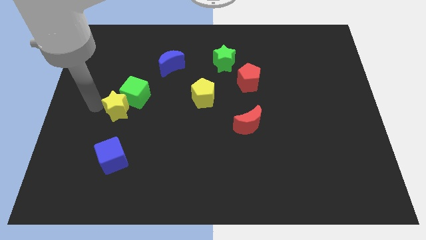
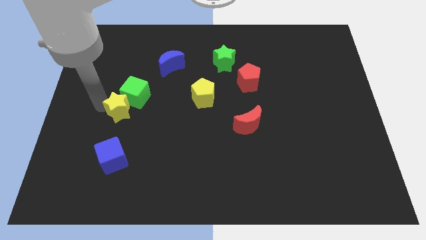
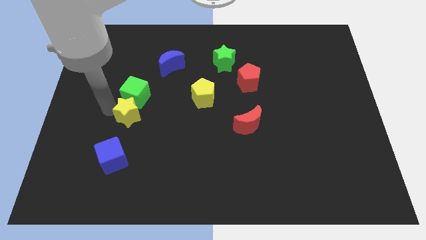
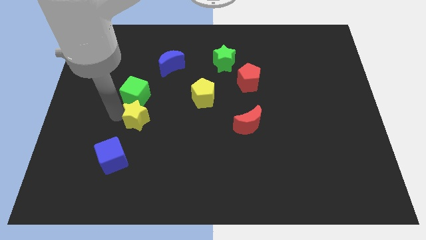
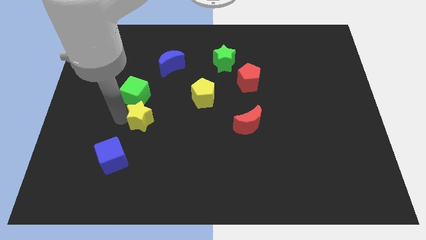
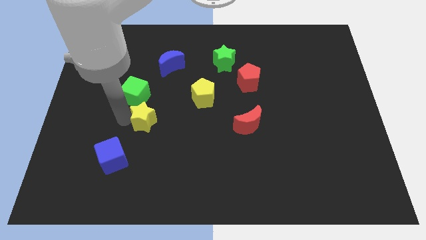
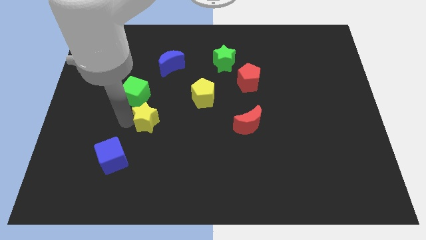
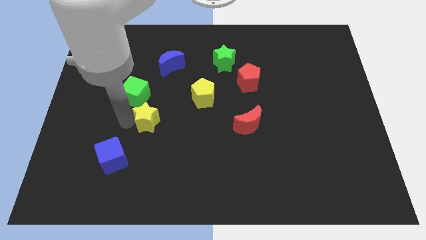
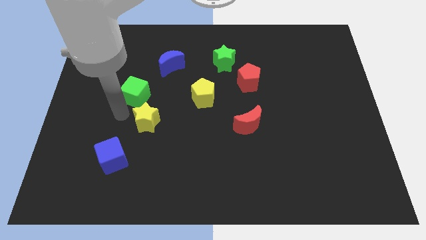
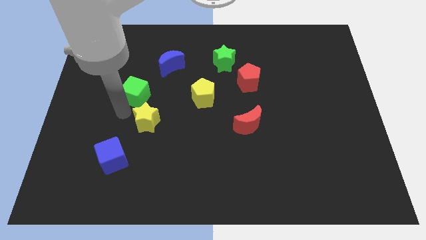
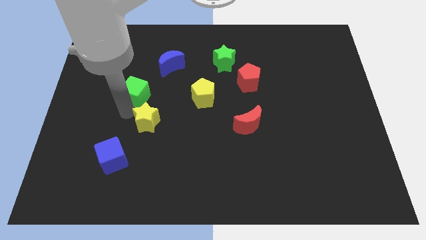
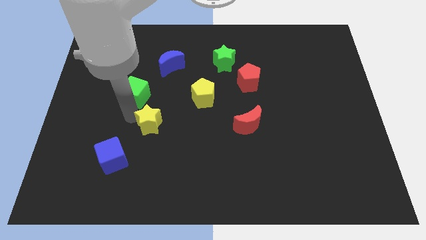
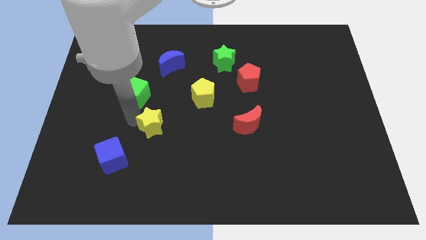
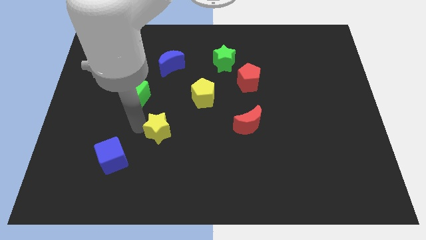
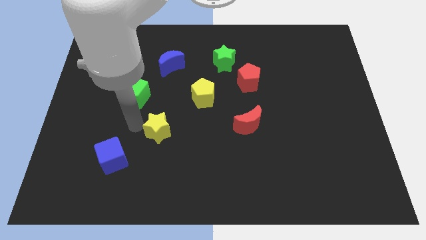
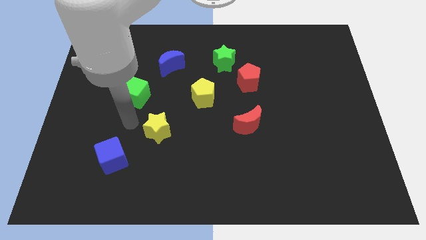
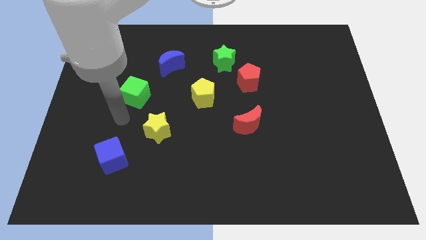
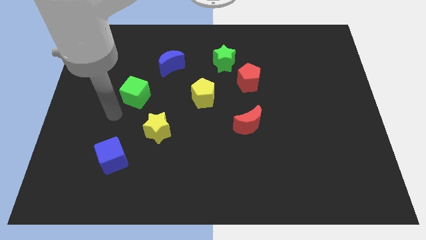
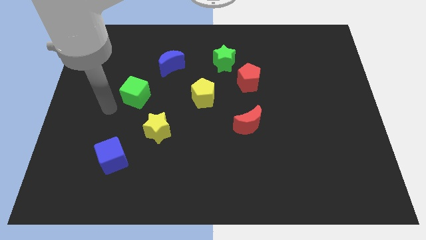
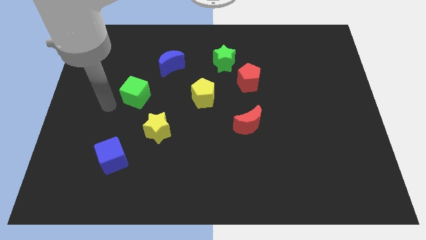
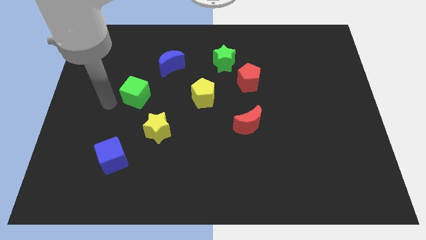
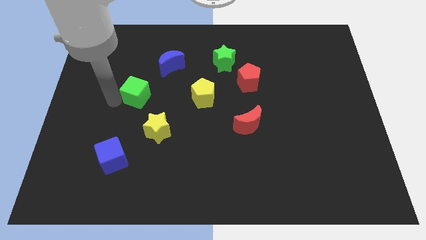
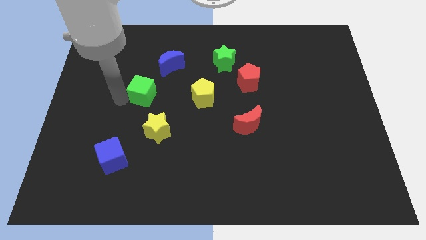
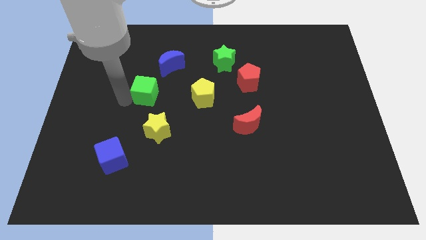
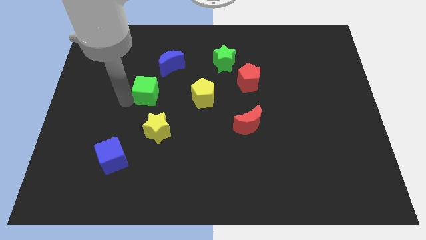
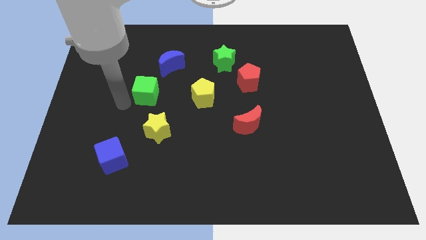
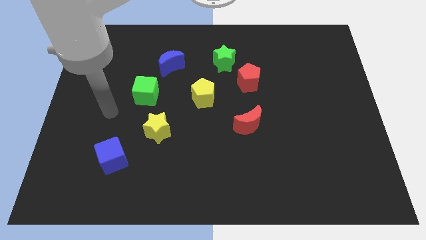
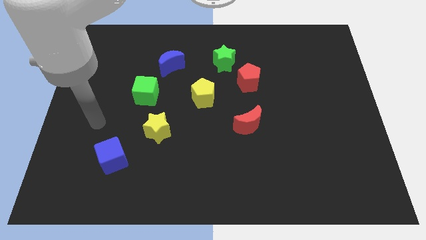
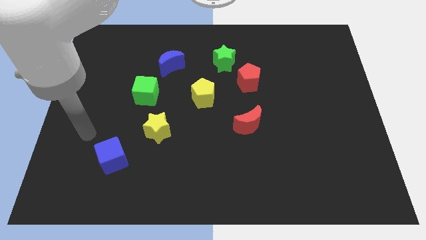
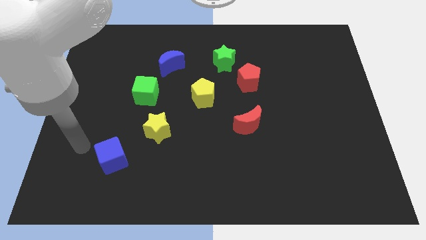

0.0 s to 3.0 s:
separate the yellow star and green cube

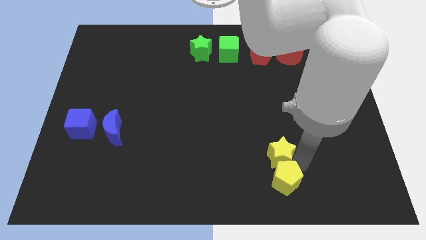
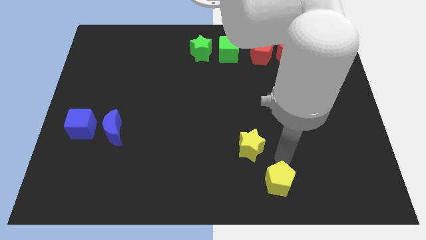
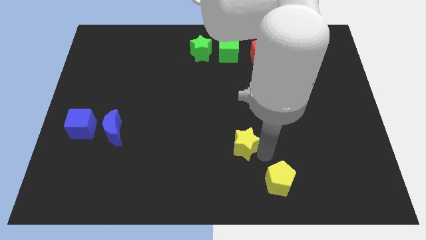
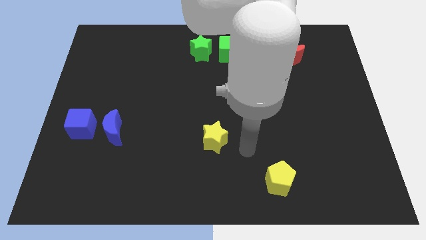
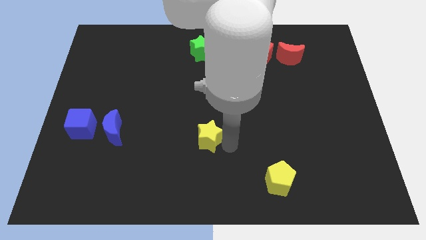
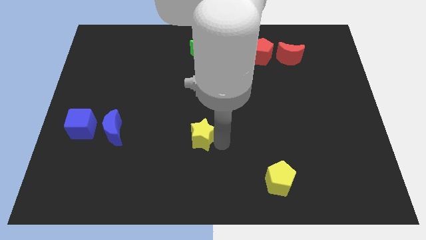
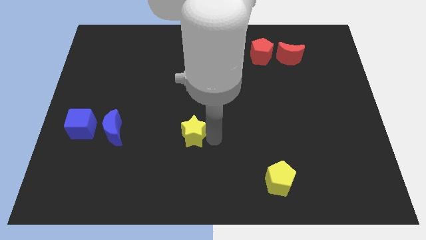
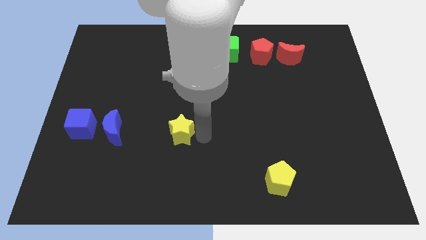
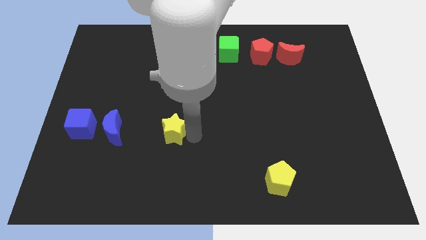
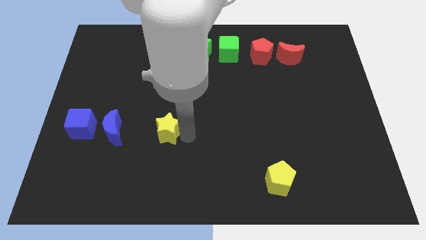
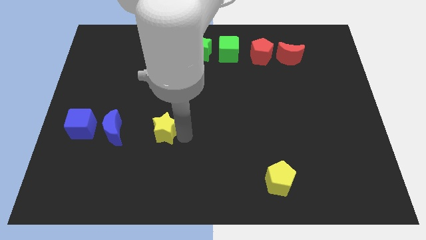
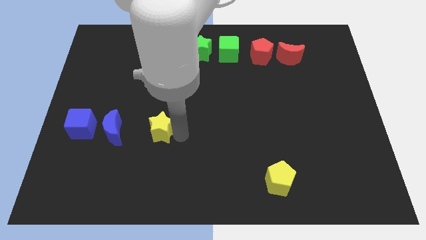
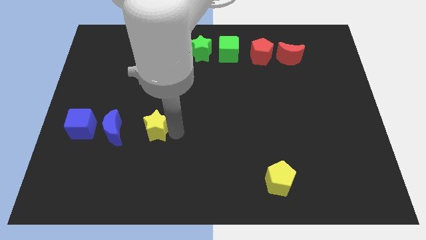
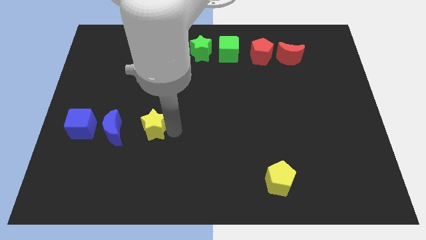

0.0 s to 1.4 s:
separate yellow star from the yellow pentagon

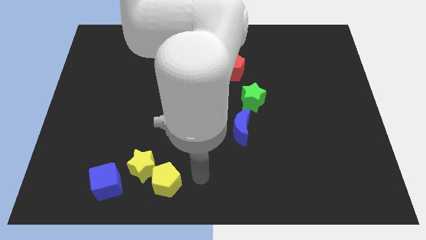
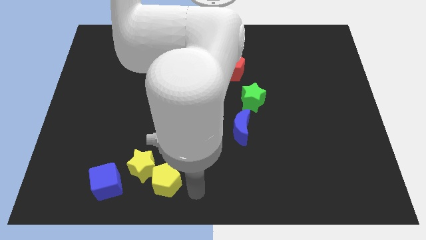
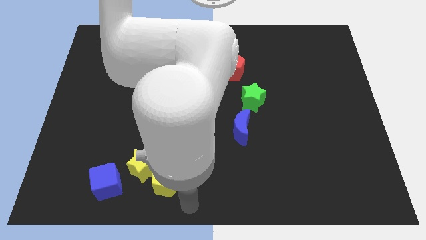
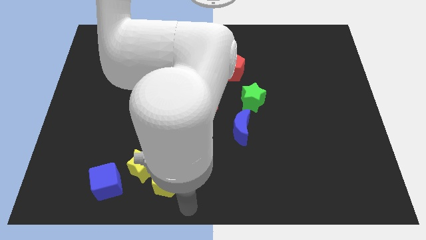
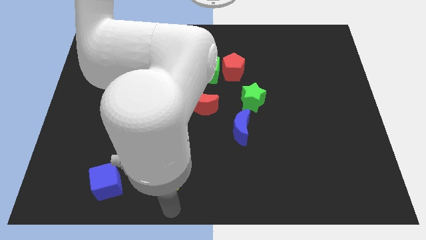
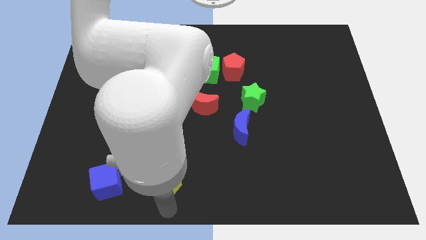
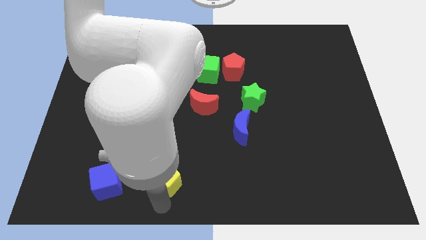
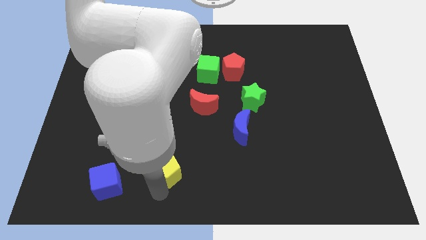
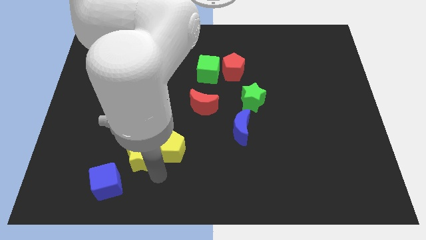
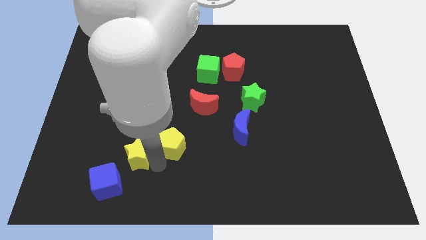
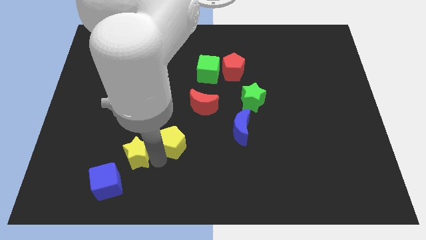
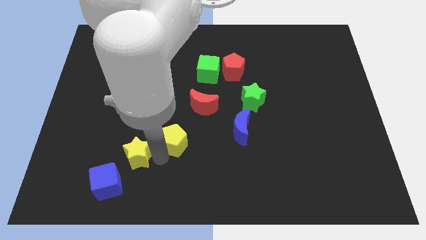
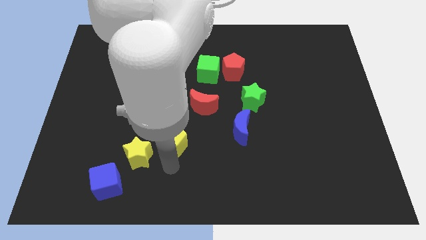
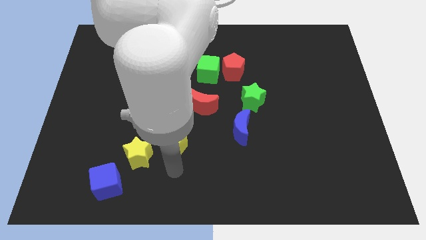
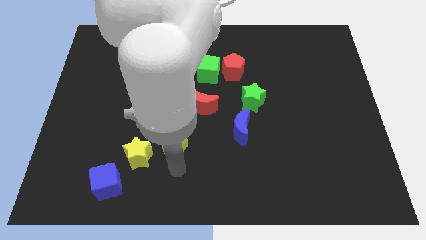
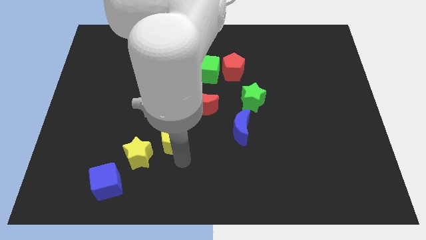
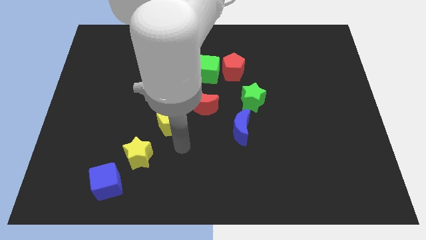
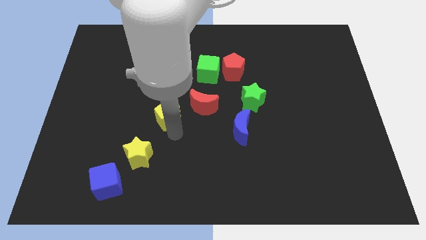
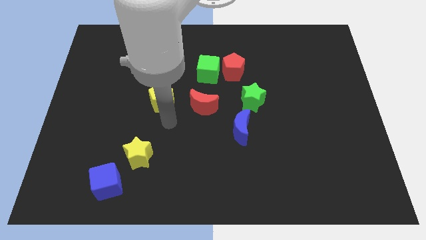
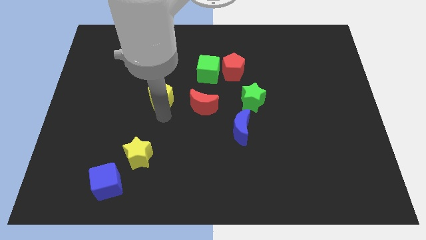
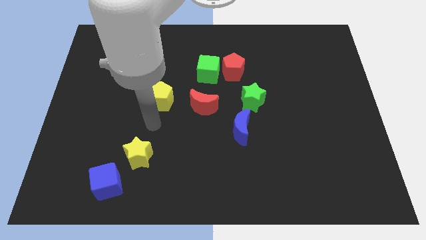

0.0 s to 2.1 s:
push the yellow pentagon to the left side of the red moon

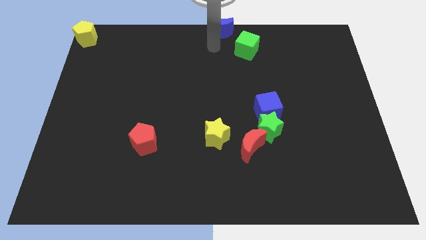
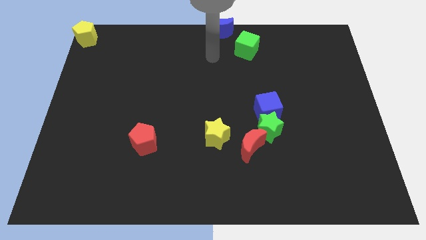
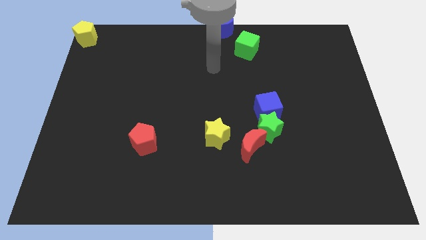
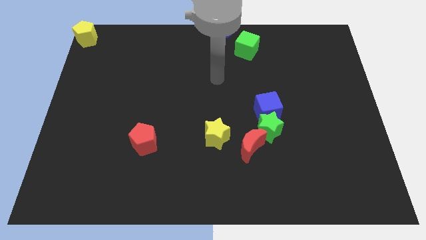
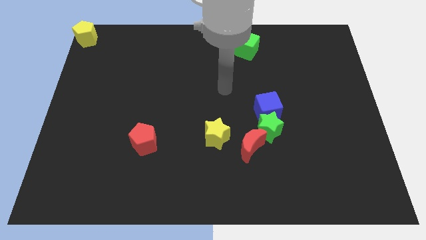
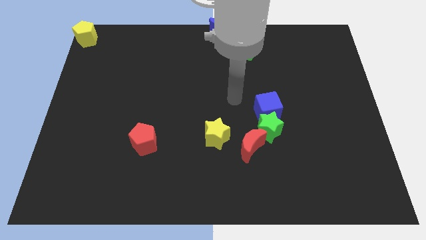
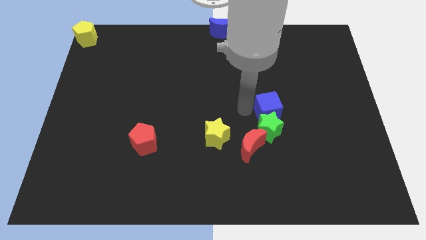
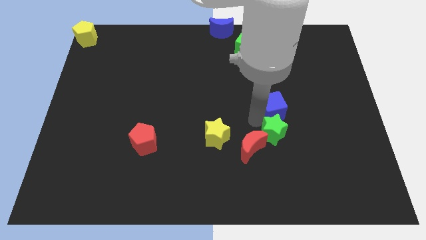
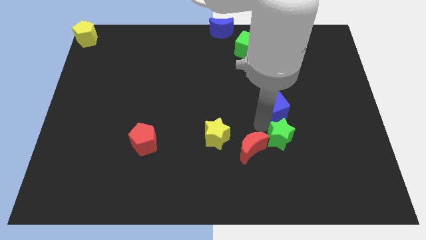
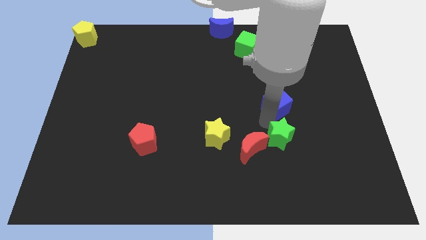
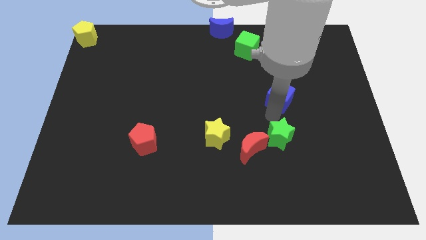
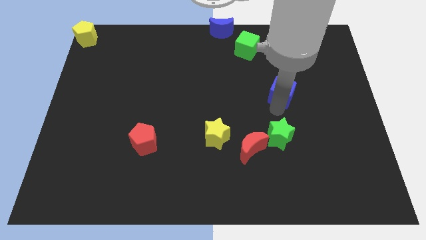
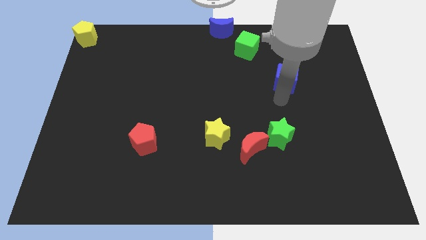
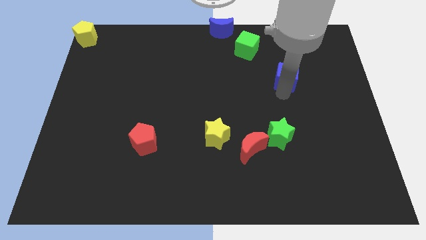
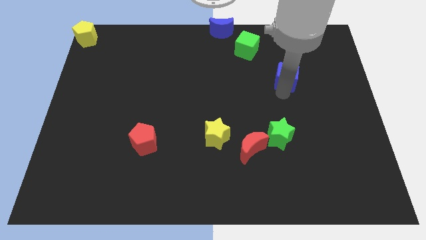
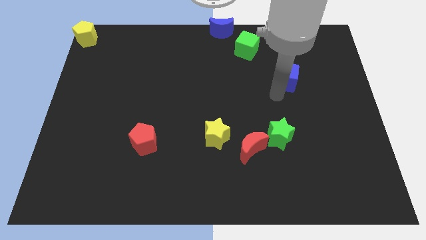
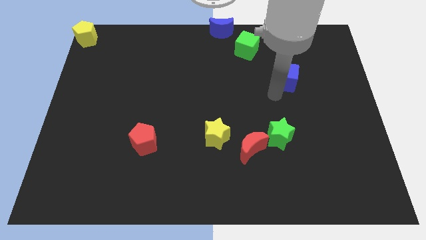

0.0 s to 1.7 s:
separate the blue cube from the green star

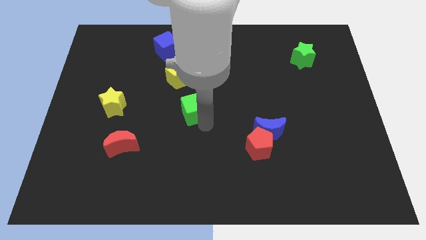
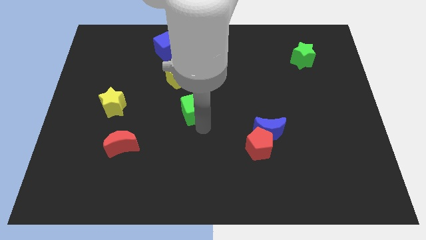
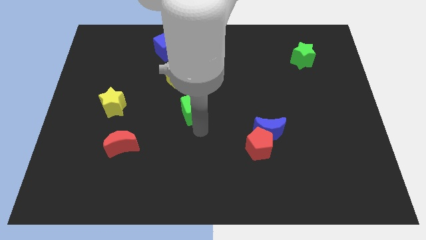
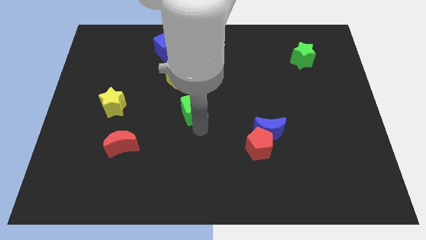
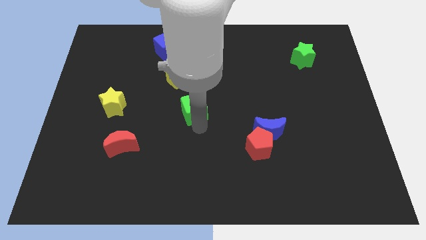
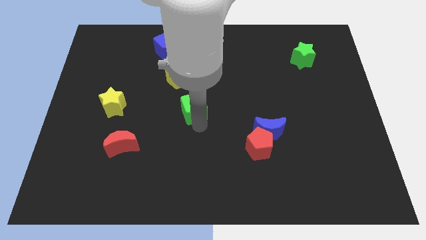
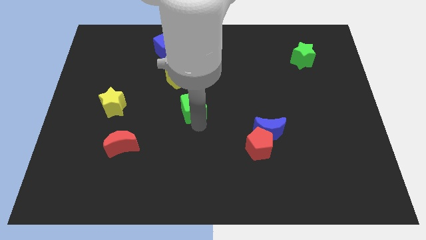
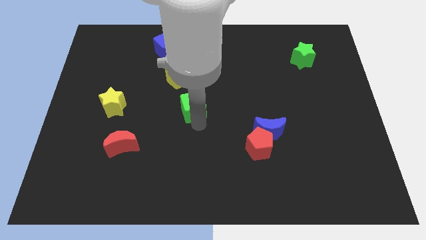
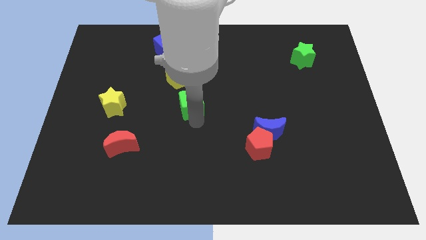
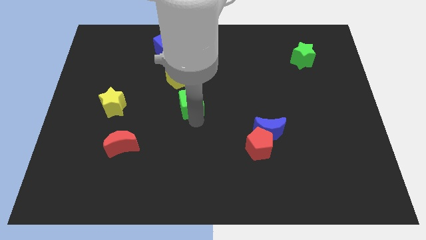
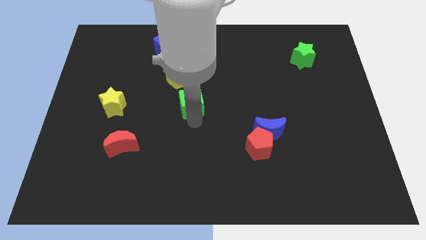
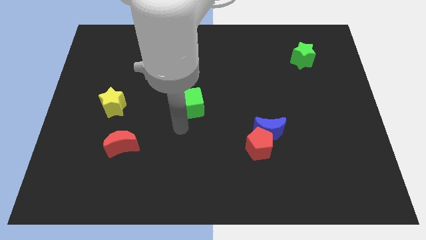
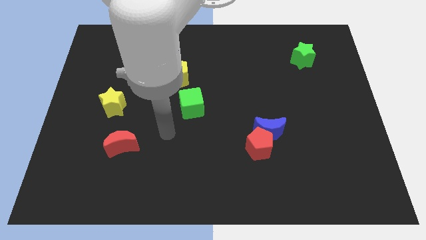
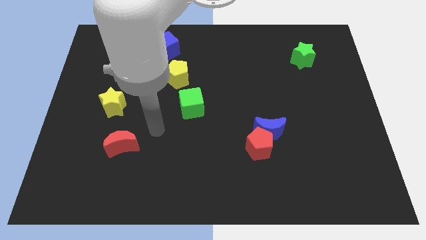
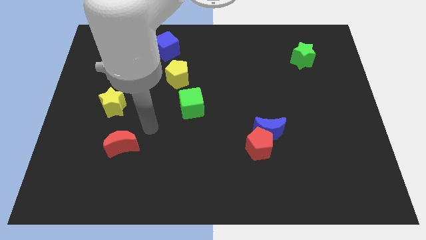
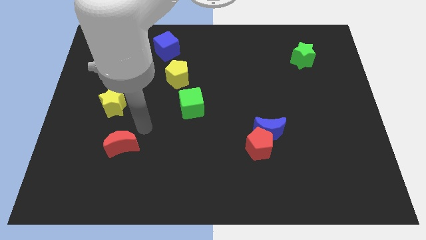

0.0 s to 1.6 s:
place green cube below the yellow pentagon
